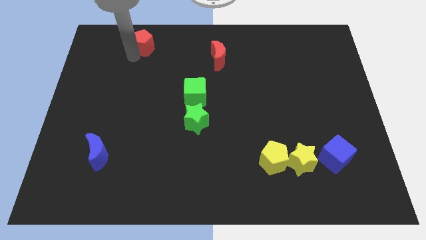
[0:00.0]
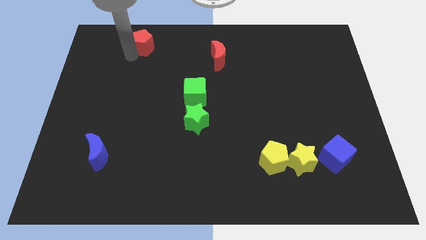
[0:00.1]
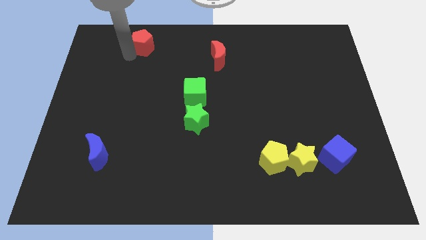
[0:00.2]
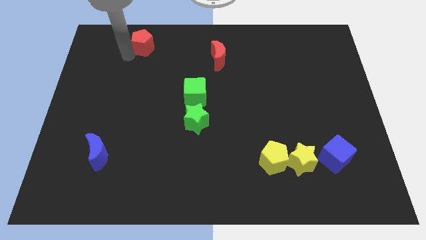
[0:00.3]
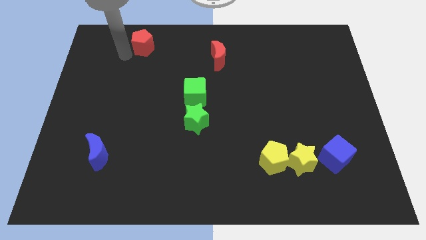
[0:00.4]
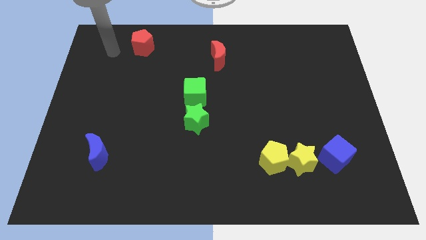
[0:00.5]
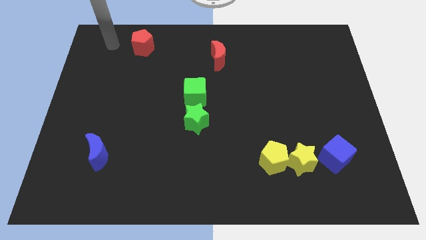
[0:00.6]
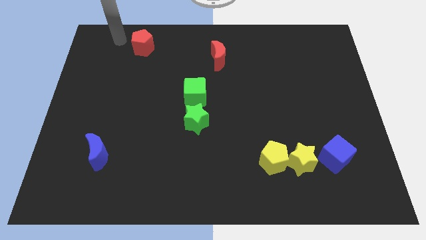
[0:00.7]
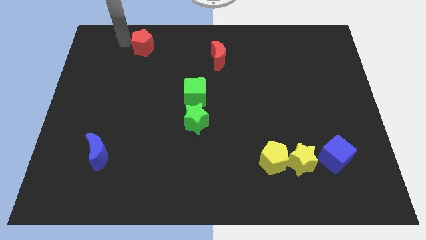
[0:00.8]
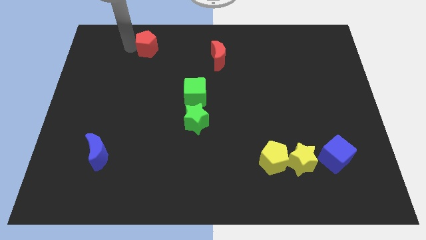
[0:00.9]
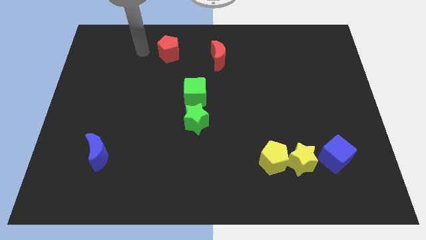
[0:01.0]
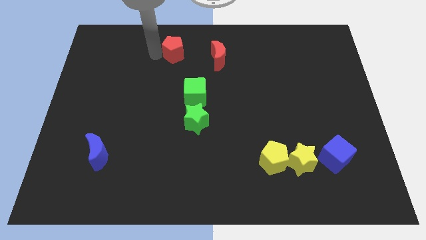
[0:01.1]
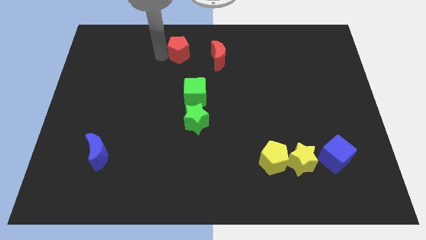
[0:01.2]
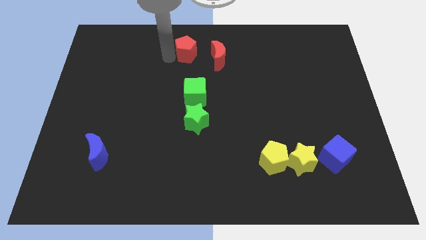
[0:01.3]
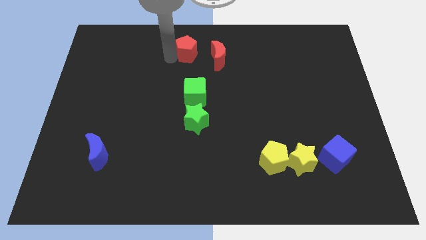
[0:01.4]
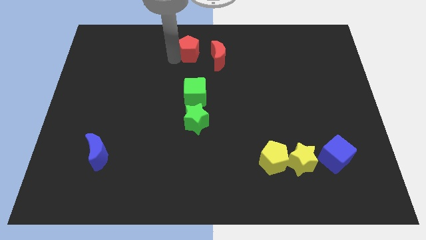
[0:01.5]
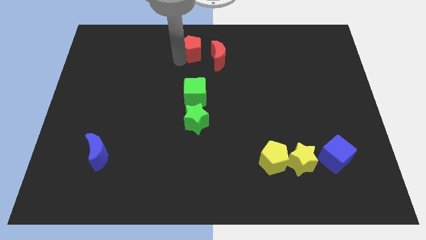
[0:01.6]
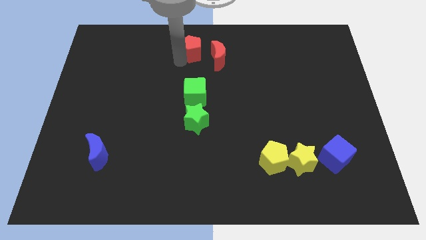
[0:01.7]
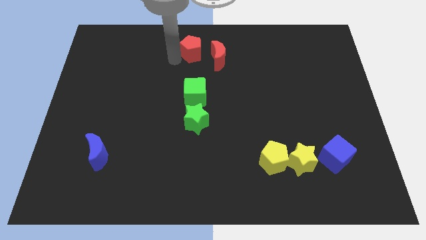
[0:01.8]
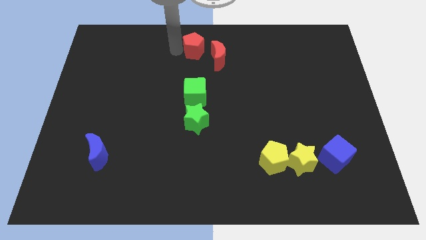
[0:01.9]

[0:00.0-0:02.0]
place the red pentagon above the green cube

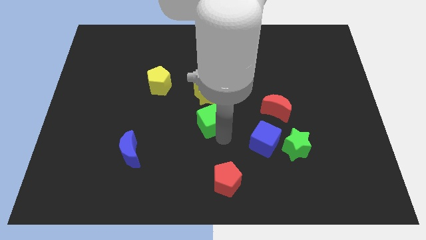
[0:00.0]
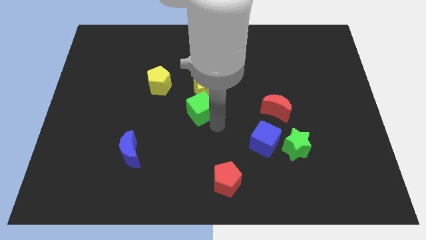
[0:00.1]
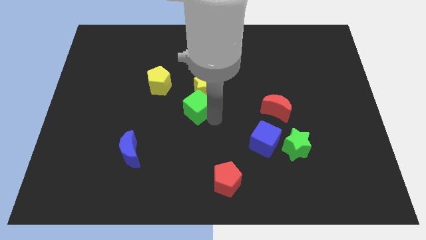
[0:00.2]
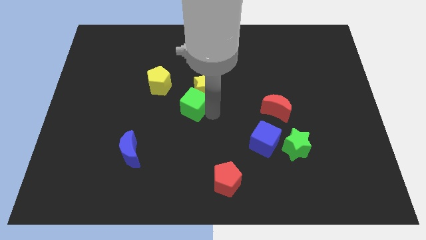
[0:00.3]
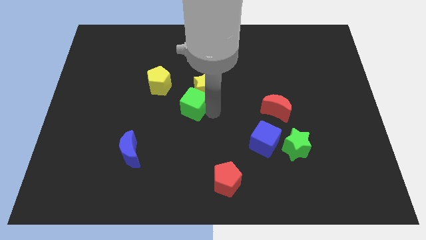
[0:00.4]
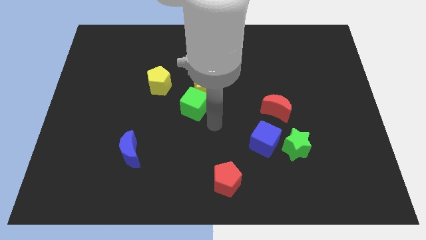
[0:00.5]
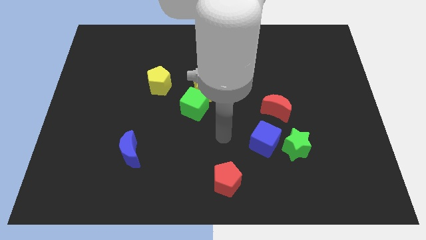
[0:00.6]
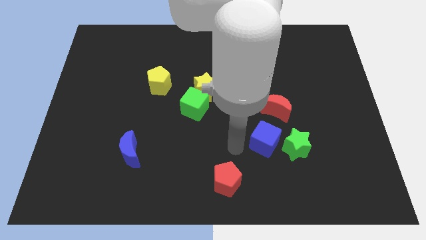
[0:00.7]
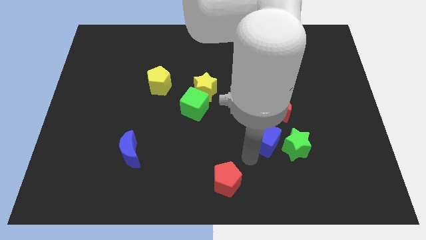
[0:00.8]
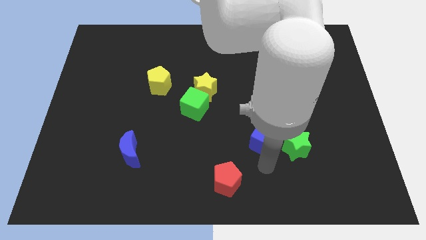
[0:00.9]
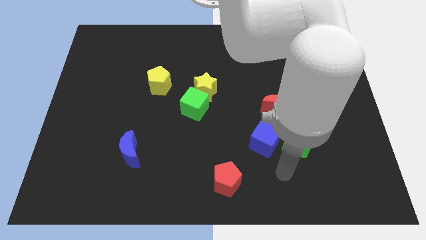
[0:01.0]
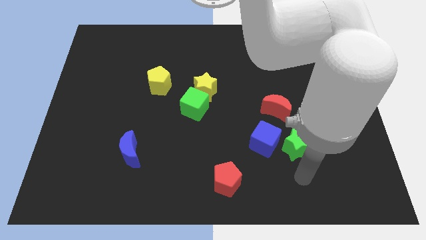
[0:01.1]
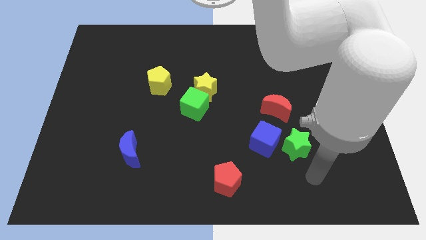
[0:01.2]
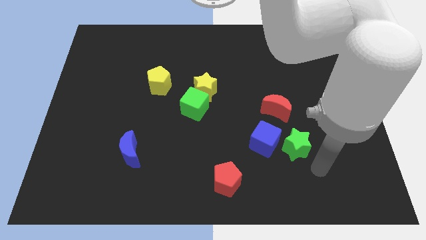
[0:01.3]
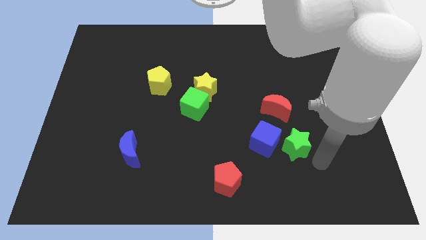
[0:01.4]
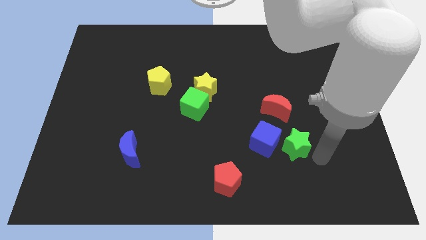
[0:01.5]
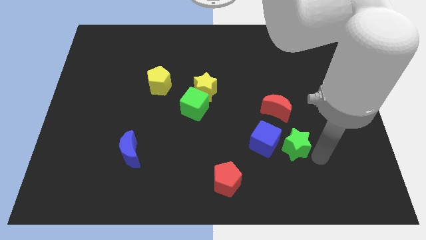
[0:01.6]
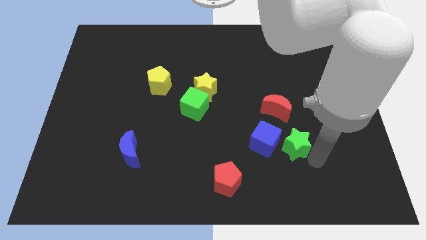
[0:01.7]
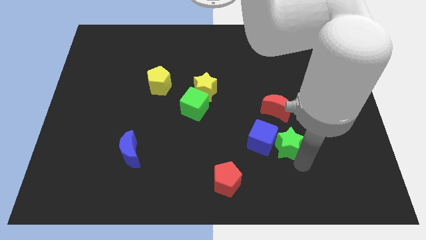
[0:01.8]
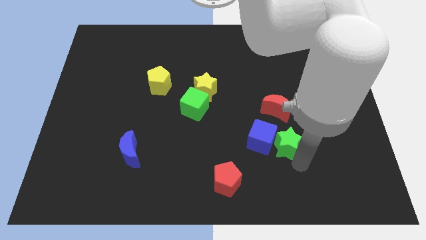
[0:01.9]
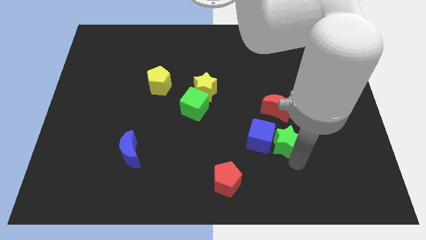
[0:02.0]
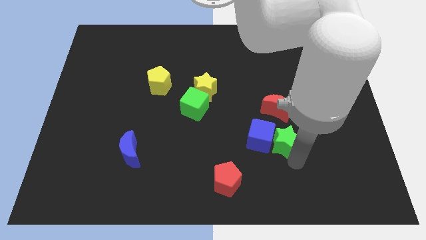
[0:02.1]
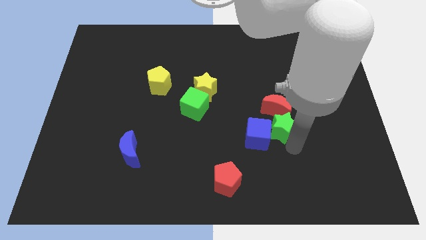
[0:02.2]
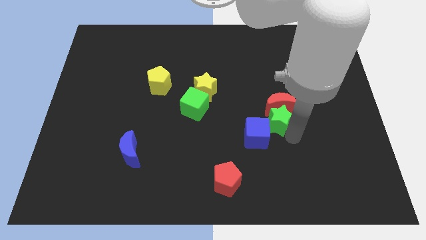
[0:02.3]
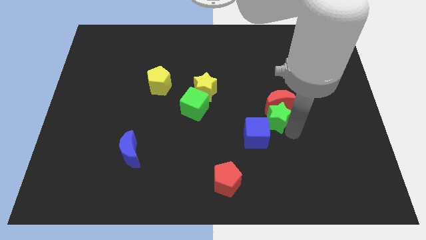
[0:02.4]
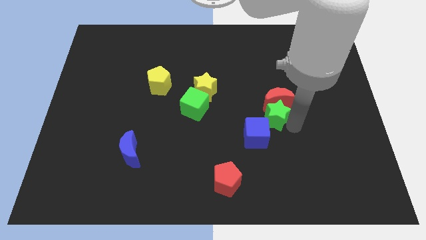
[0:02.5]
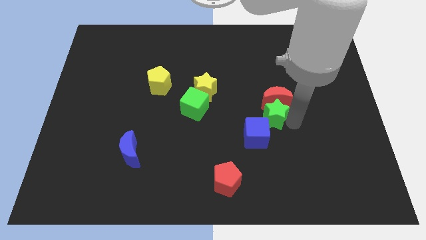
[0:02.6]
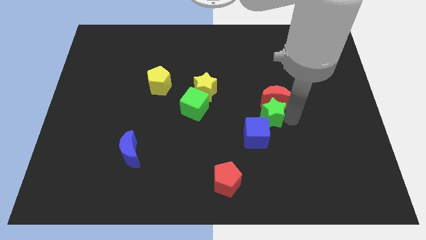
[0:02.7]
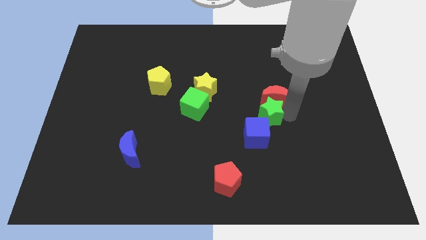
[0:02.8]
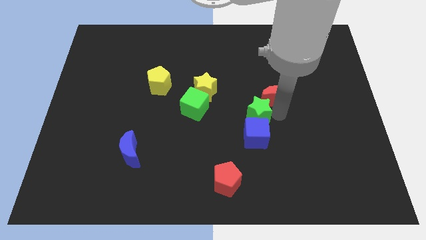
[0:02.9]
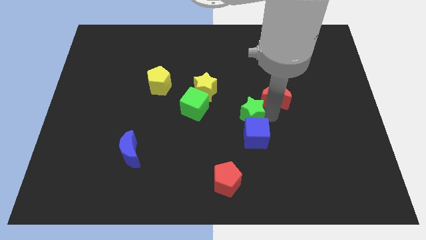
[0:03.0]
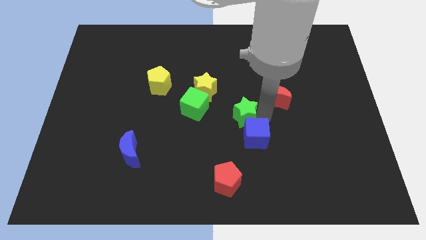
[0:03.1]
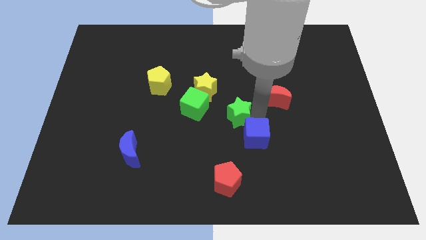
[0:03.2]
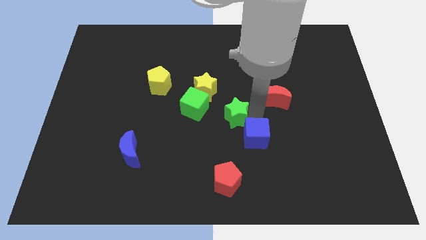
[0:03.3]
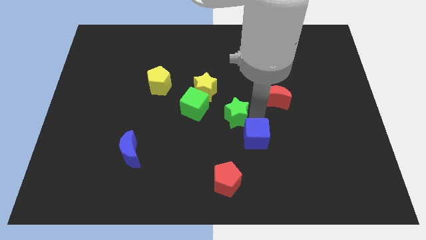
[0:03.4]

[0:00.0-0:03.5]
place green star to the right of green cube

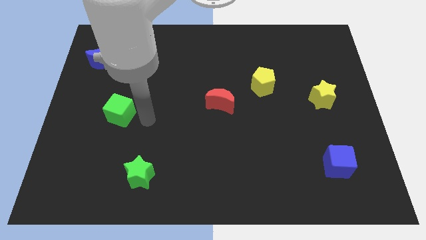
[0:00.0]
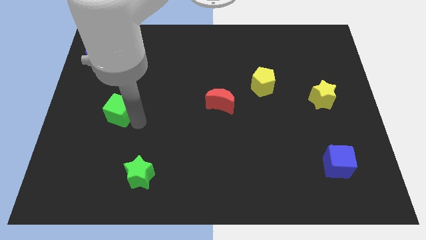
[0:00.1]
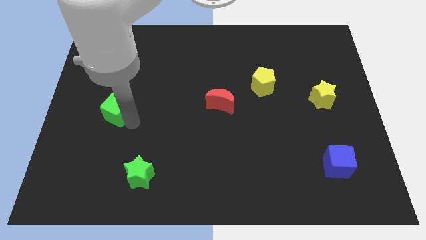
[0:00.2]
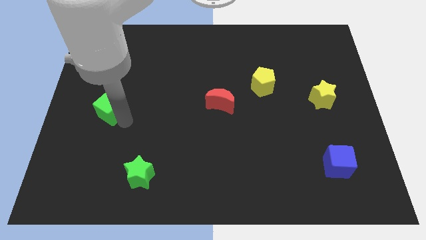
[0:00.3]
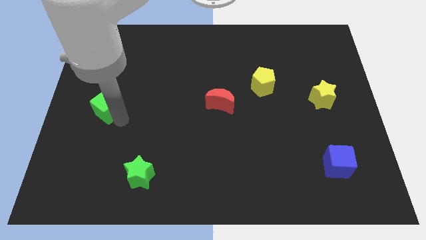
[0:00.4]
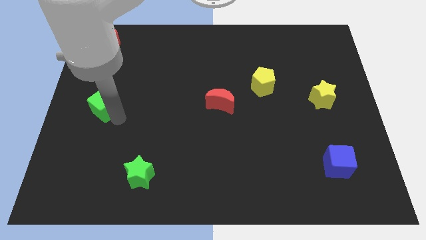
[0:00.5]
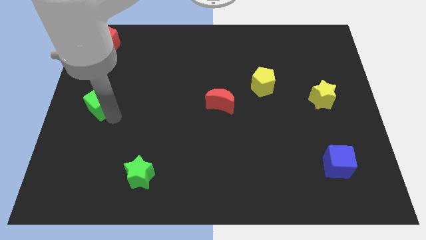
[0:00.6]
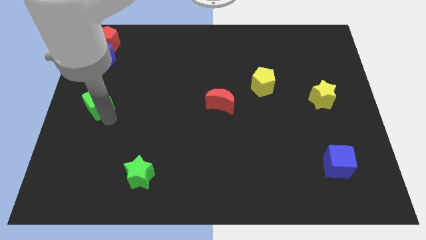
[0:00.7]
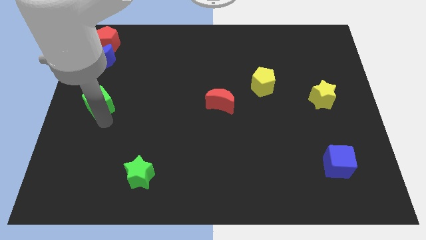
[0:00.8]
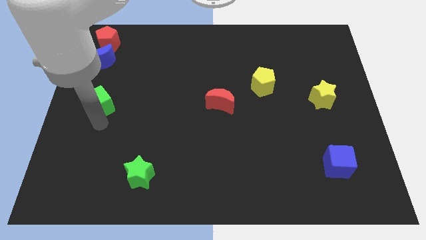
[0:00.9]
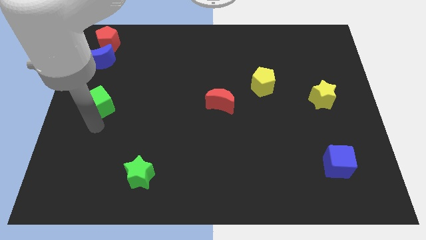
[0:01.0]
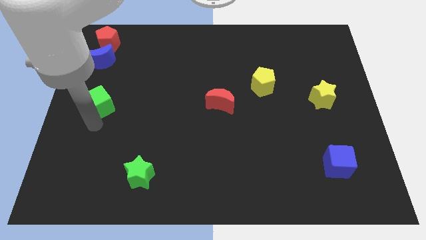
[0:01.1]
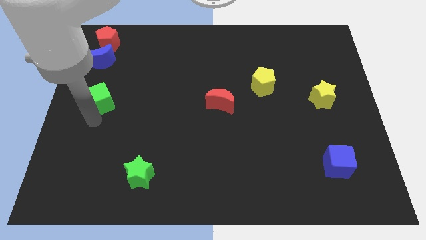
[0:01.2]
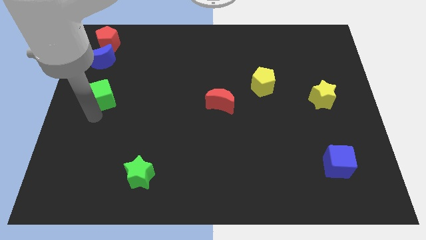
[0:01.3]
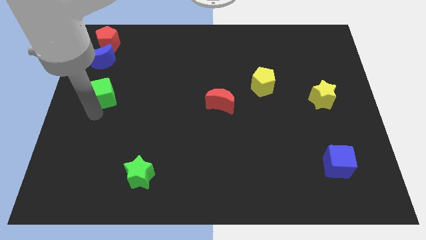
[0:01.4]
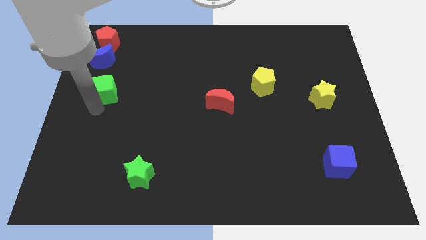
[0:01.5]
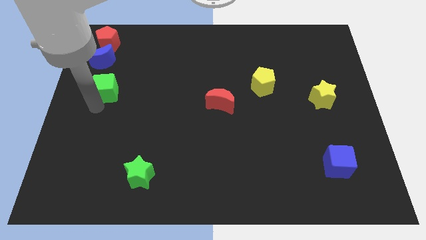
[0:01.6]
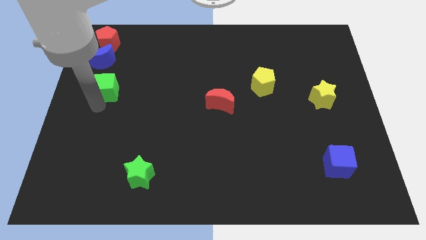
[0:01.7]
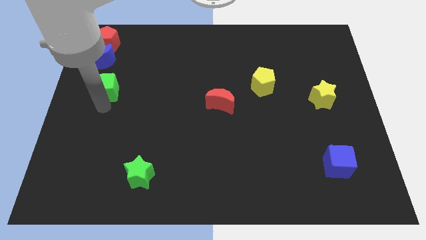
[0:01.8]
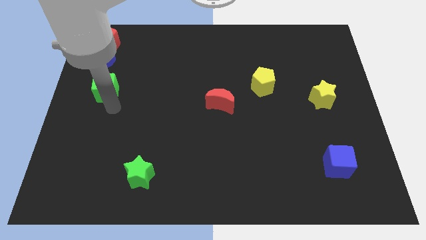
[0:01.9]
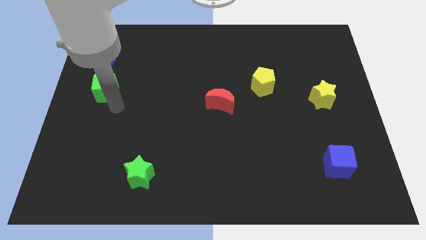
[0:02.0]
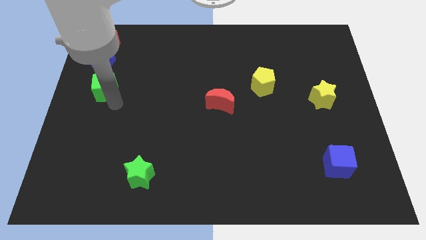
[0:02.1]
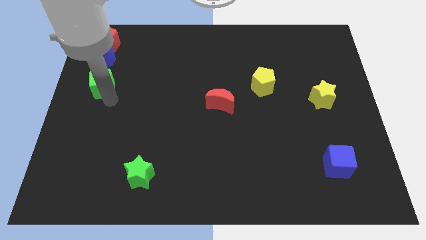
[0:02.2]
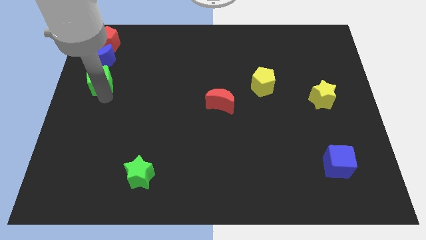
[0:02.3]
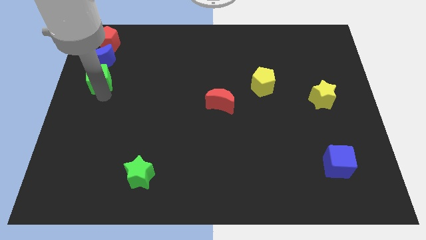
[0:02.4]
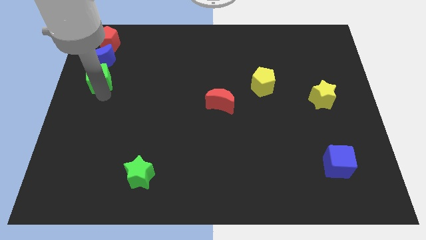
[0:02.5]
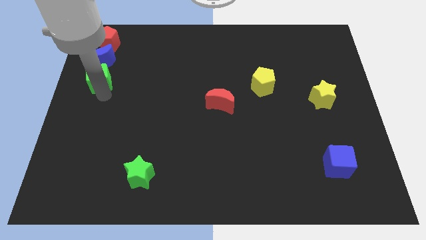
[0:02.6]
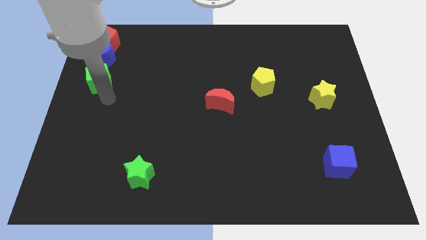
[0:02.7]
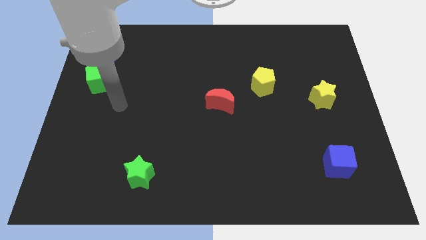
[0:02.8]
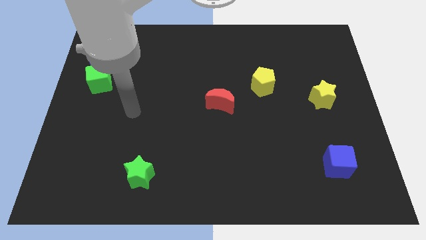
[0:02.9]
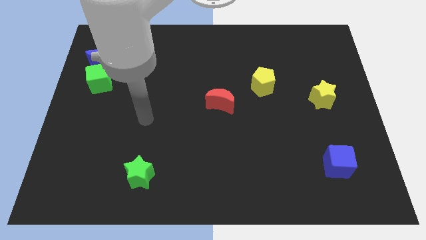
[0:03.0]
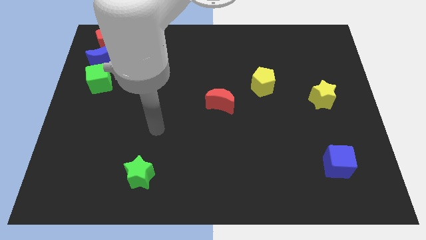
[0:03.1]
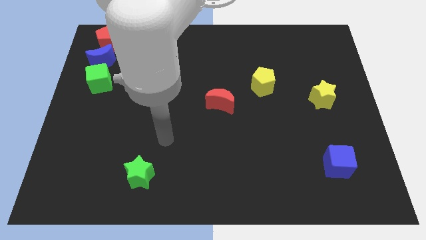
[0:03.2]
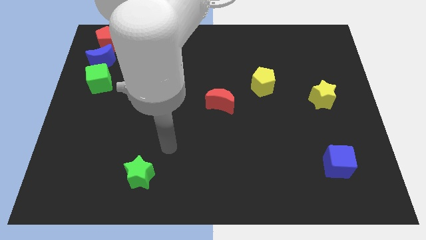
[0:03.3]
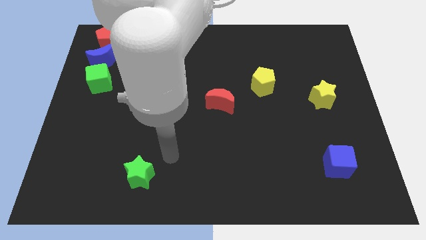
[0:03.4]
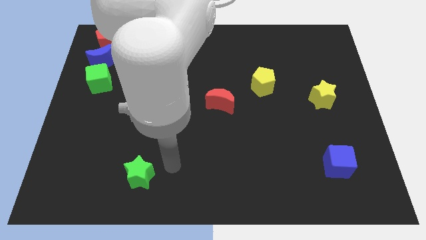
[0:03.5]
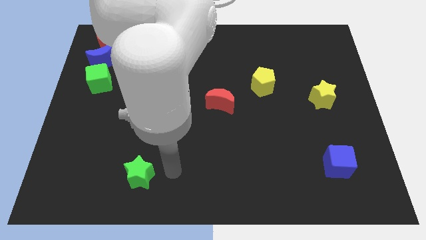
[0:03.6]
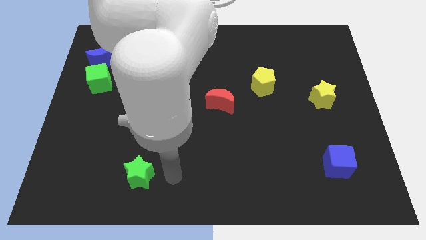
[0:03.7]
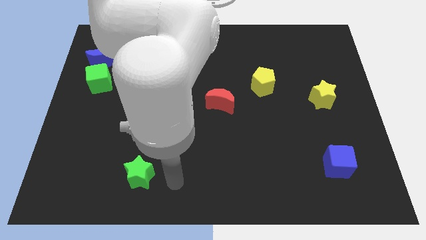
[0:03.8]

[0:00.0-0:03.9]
place green cube below blue moon
